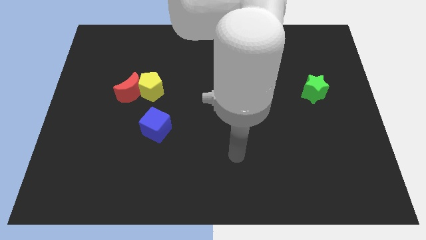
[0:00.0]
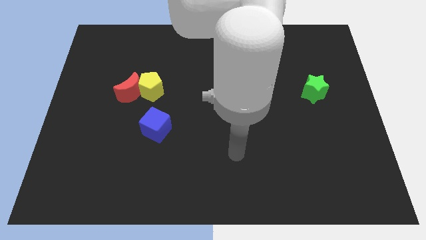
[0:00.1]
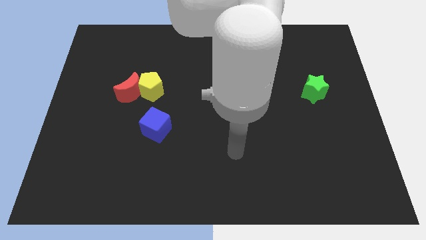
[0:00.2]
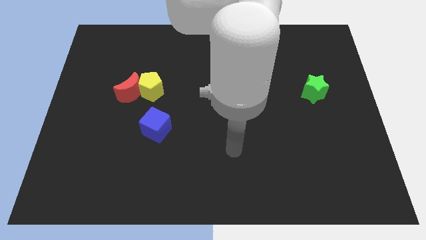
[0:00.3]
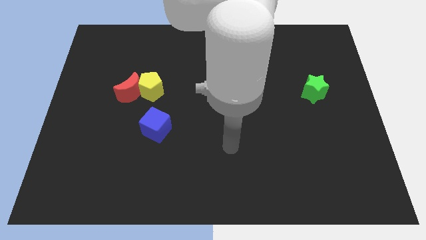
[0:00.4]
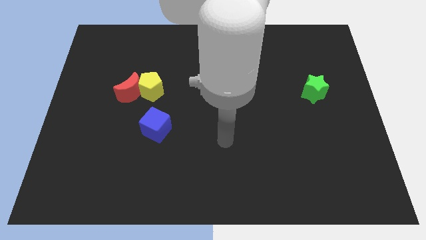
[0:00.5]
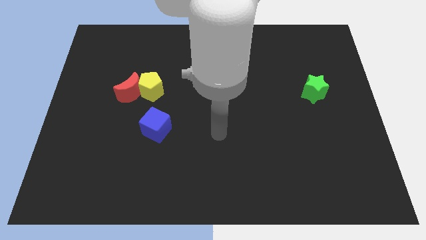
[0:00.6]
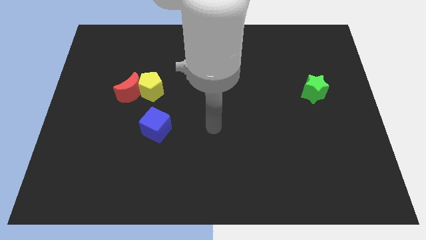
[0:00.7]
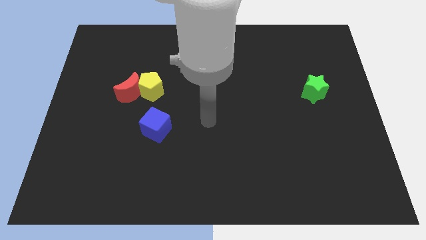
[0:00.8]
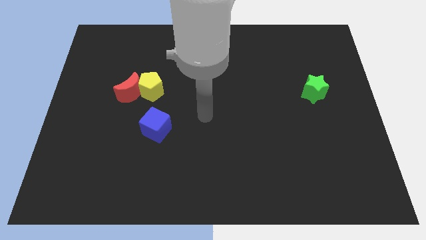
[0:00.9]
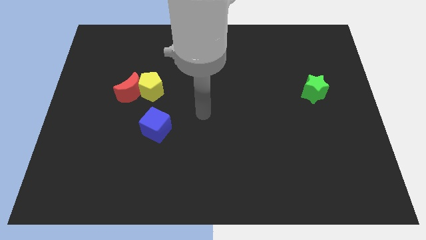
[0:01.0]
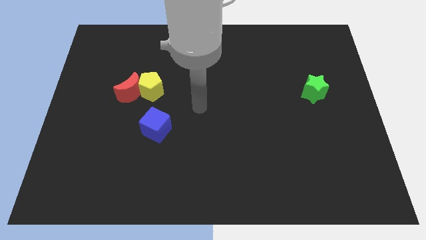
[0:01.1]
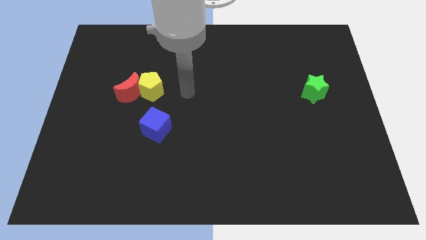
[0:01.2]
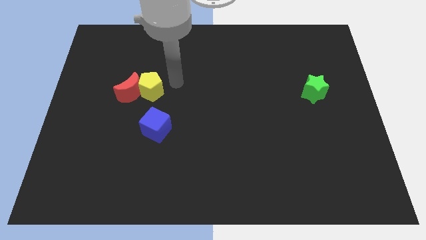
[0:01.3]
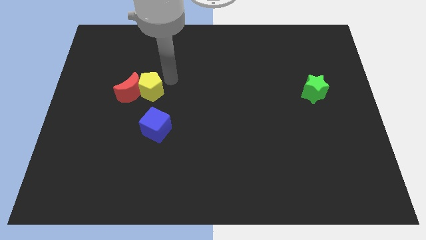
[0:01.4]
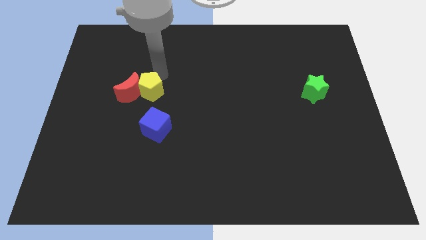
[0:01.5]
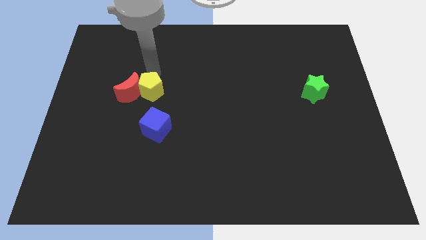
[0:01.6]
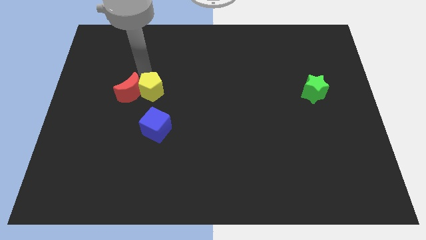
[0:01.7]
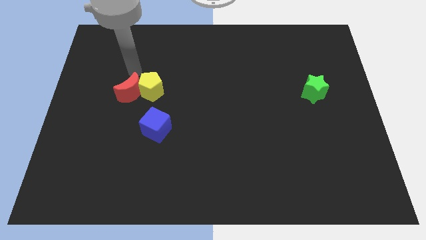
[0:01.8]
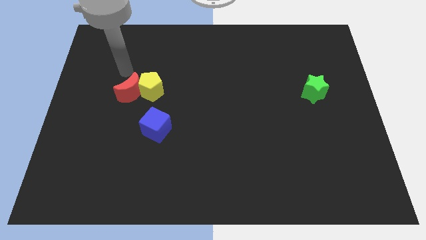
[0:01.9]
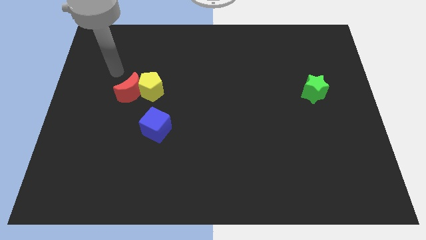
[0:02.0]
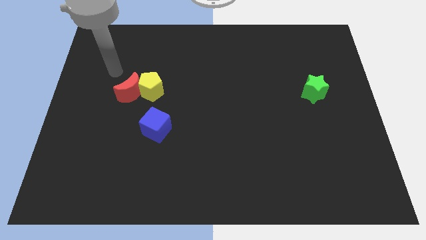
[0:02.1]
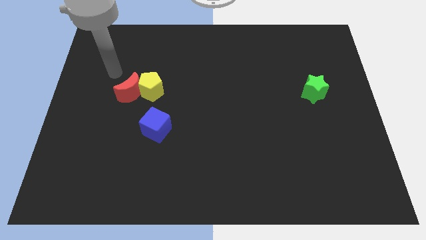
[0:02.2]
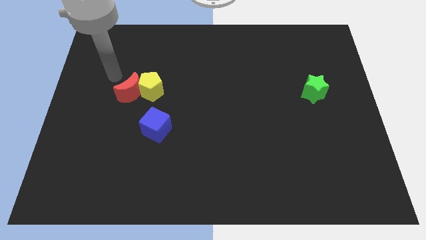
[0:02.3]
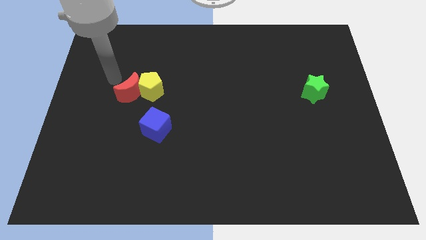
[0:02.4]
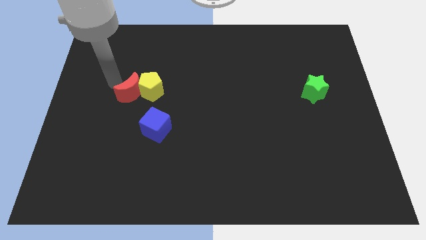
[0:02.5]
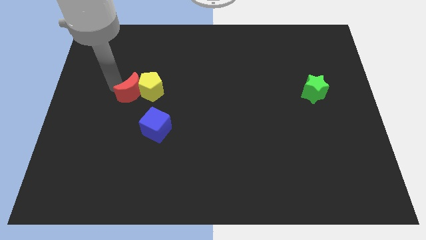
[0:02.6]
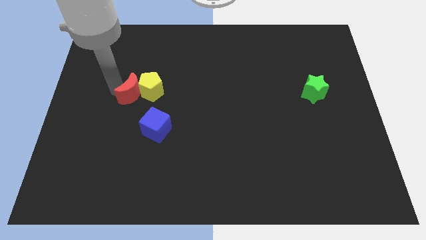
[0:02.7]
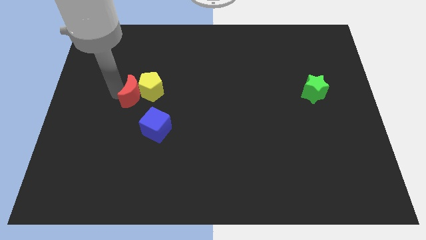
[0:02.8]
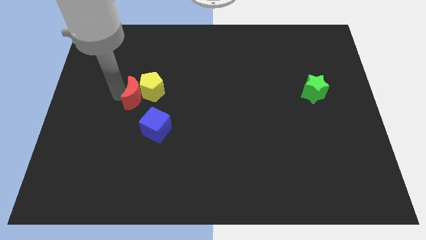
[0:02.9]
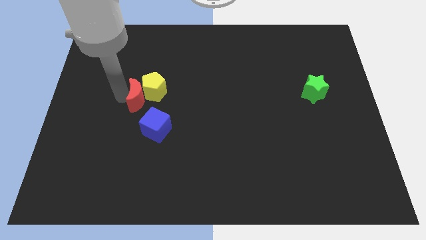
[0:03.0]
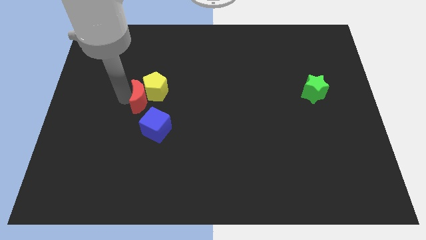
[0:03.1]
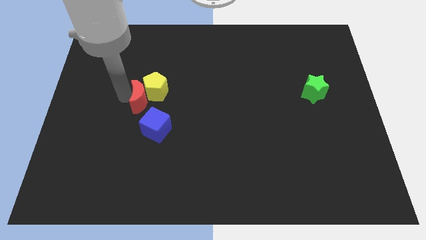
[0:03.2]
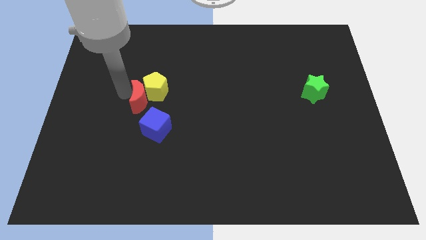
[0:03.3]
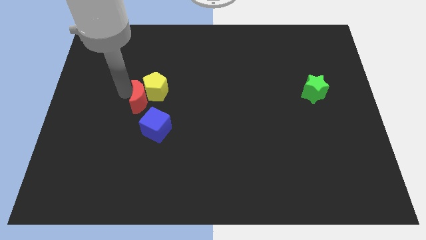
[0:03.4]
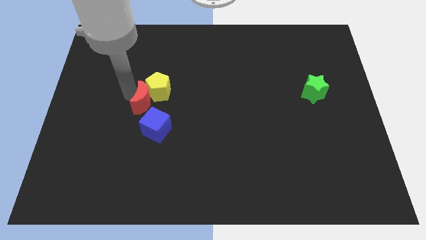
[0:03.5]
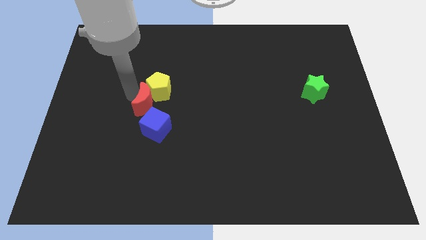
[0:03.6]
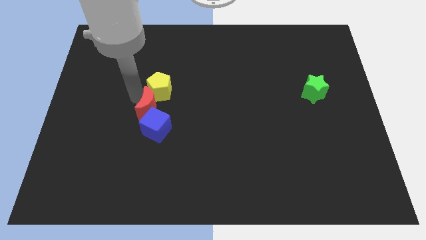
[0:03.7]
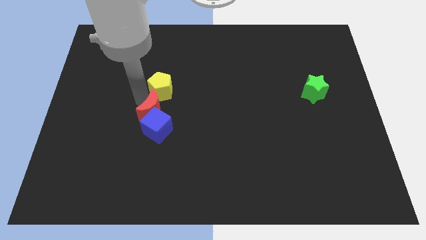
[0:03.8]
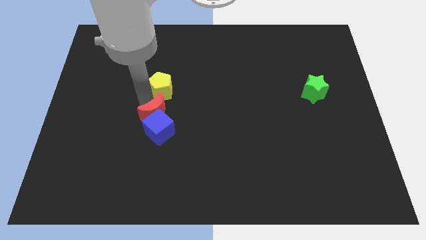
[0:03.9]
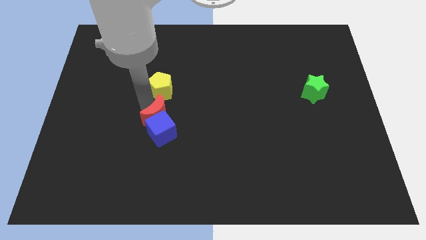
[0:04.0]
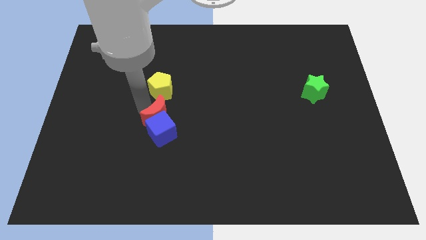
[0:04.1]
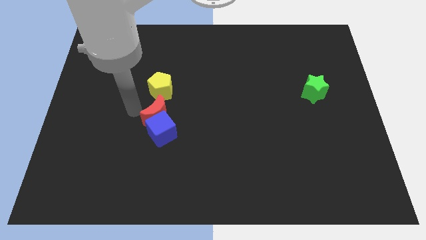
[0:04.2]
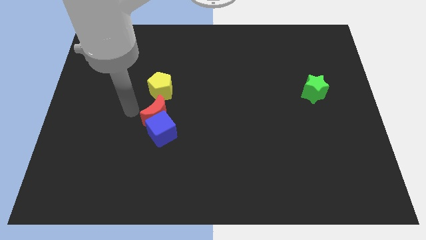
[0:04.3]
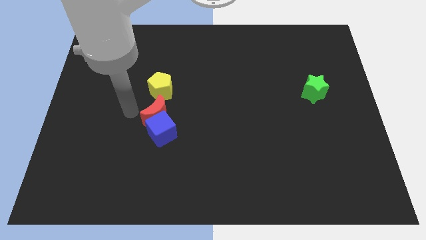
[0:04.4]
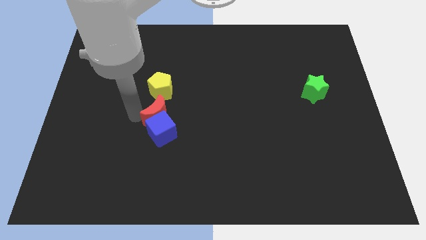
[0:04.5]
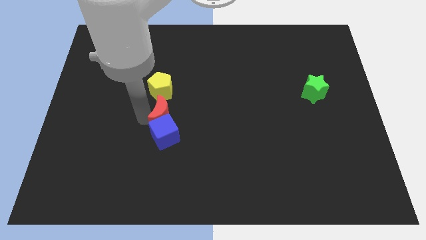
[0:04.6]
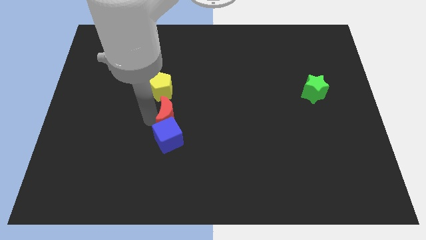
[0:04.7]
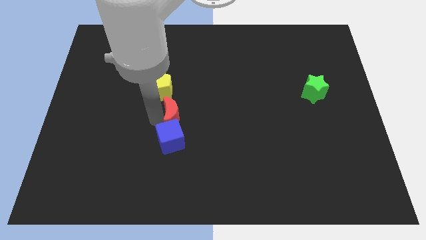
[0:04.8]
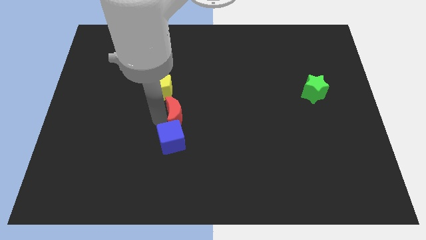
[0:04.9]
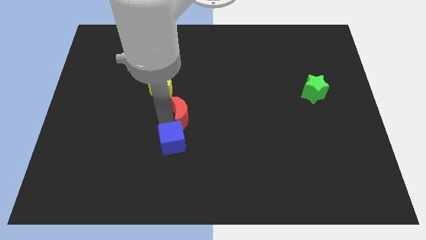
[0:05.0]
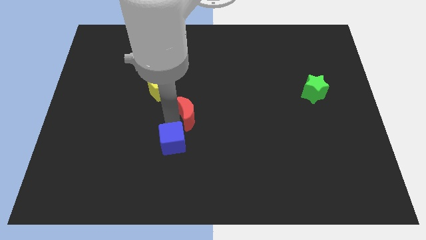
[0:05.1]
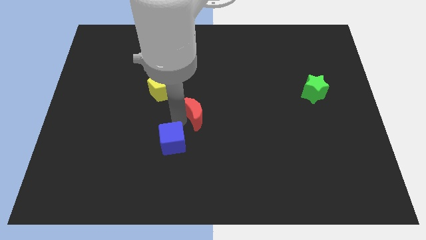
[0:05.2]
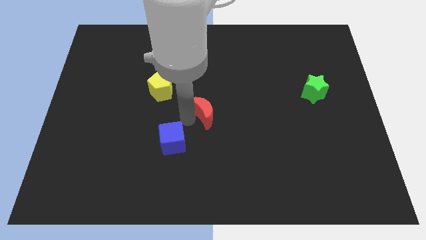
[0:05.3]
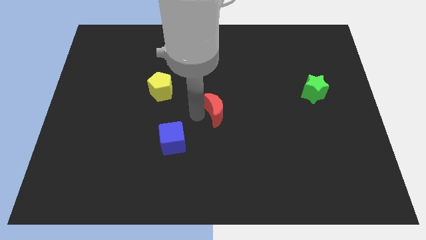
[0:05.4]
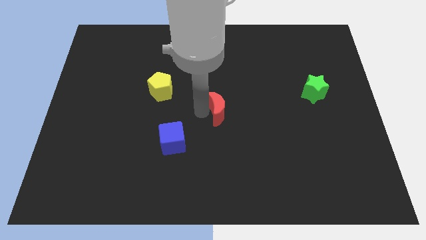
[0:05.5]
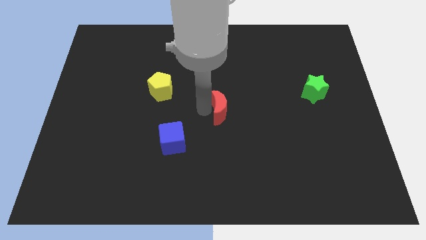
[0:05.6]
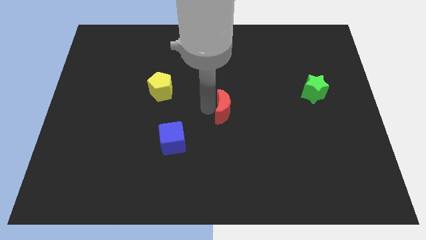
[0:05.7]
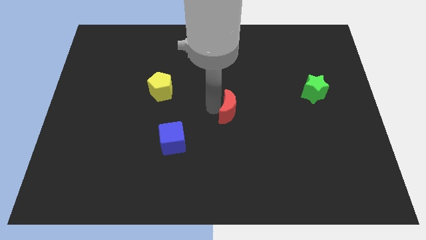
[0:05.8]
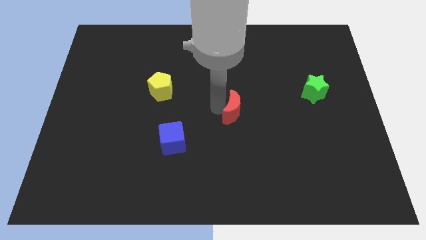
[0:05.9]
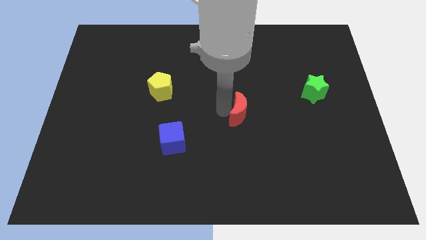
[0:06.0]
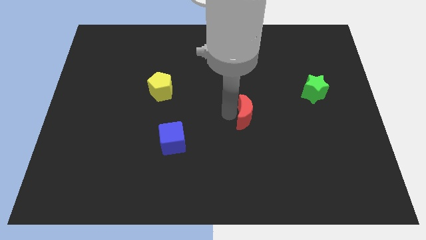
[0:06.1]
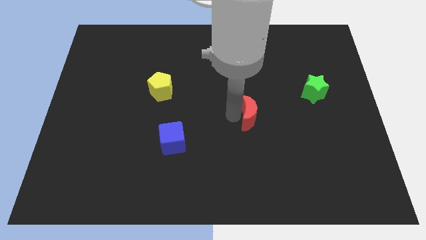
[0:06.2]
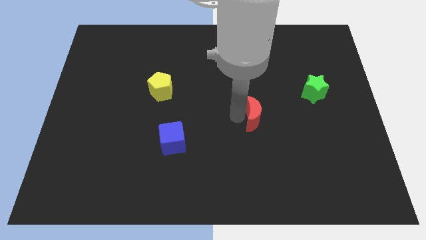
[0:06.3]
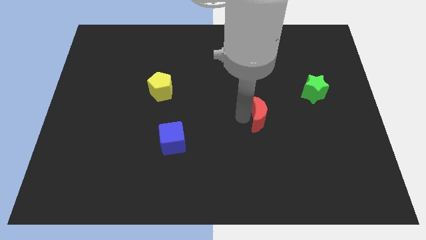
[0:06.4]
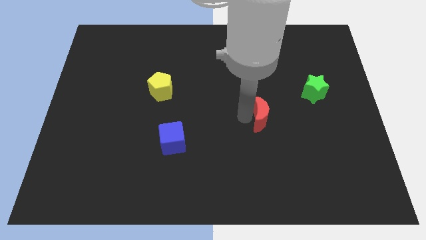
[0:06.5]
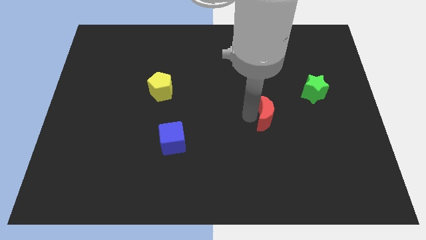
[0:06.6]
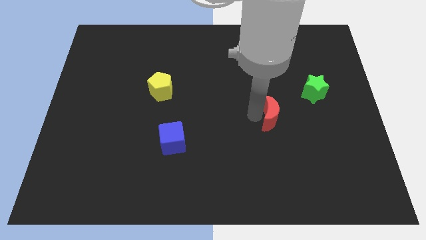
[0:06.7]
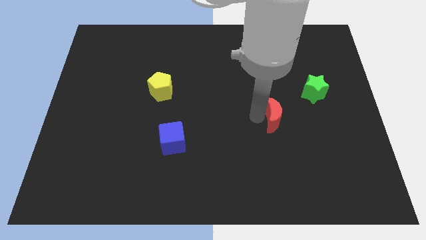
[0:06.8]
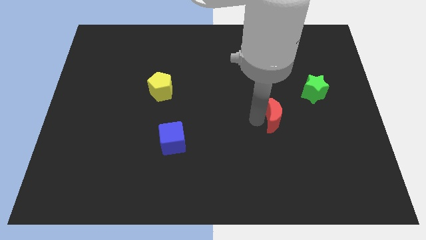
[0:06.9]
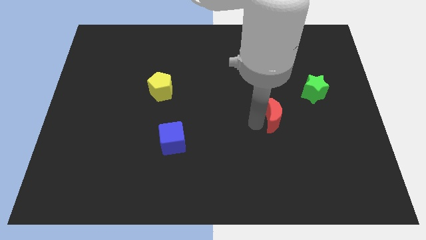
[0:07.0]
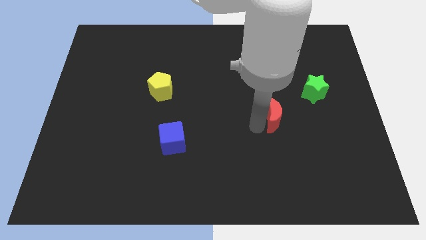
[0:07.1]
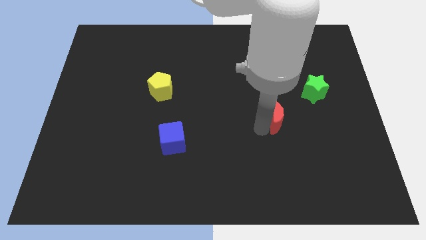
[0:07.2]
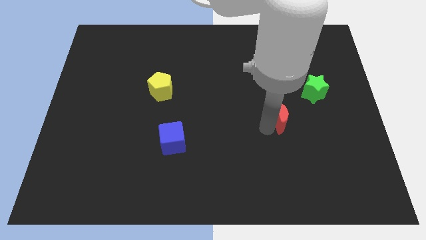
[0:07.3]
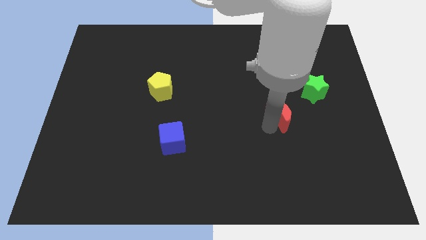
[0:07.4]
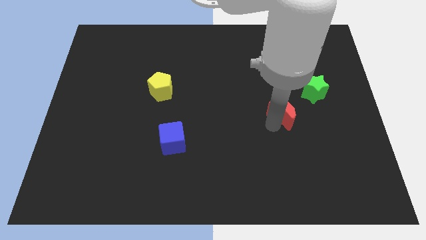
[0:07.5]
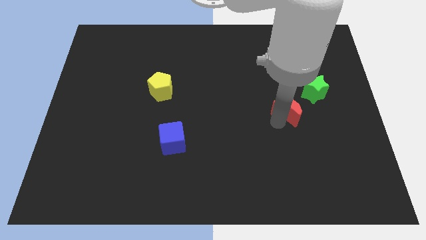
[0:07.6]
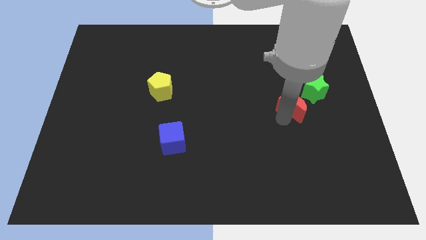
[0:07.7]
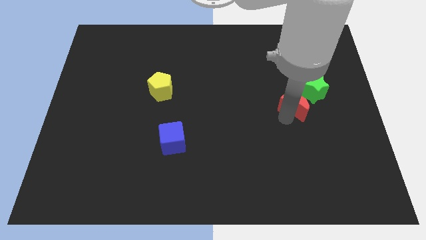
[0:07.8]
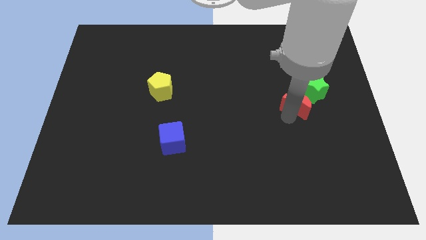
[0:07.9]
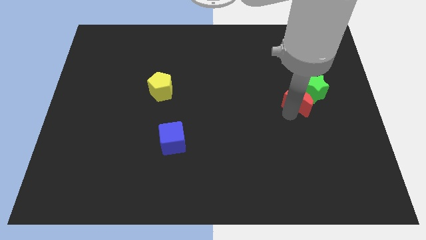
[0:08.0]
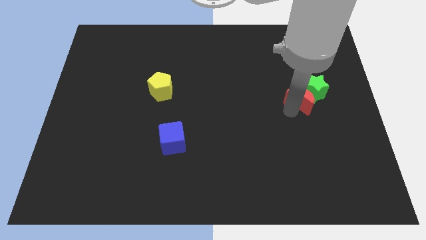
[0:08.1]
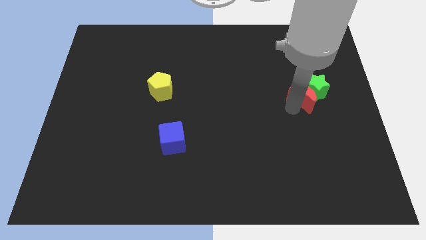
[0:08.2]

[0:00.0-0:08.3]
put the moon next to the star

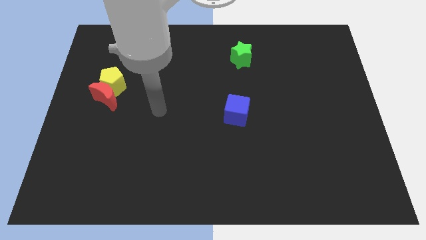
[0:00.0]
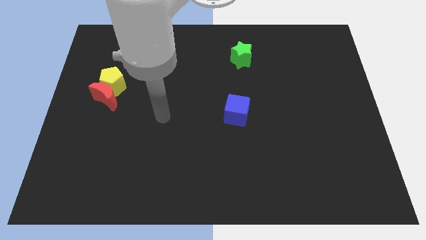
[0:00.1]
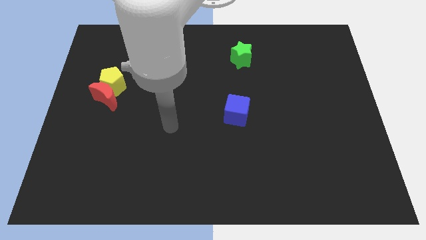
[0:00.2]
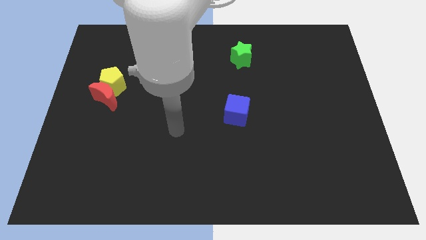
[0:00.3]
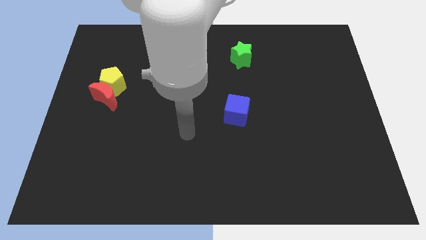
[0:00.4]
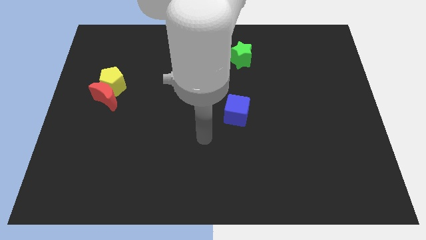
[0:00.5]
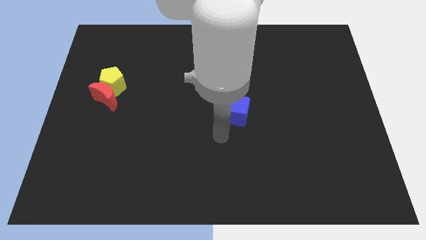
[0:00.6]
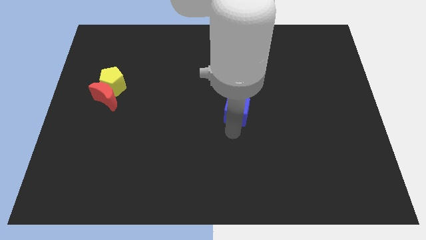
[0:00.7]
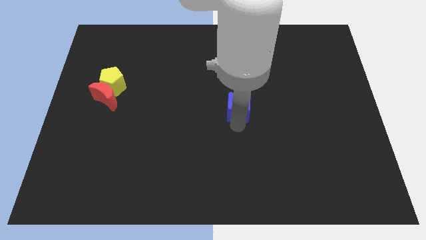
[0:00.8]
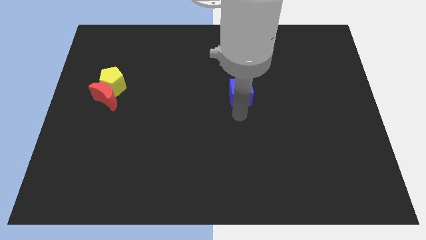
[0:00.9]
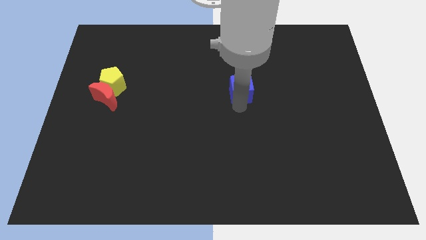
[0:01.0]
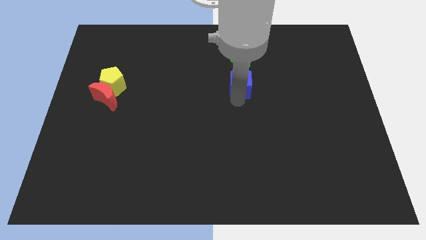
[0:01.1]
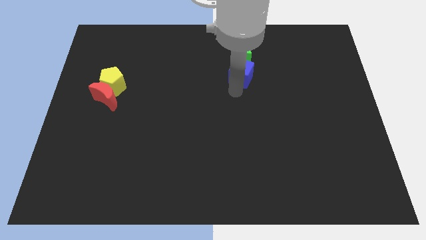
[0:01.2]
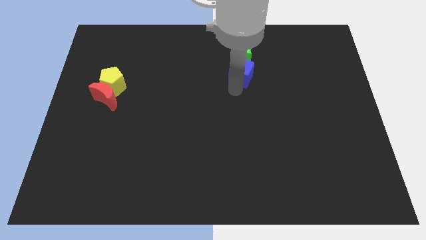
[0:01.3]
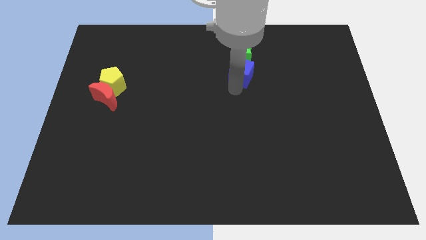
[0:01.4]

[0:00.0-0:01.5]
put the cube close to the green star
